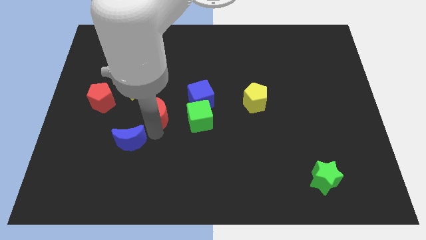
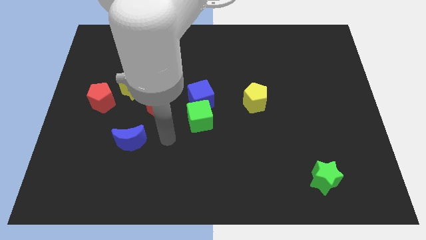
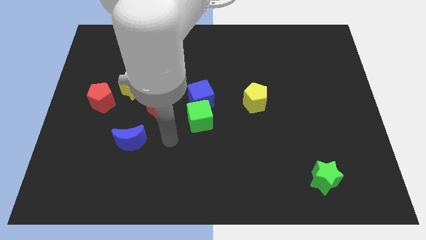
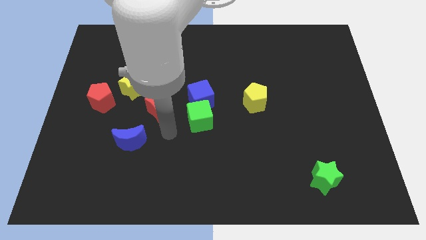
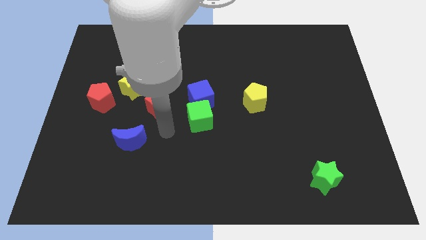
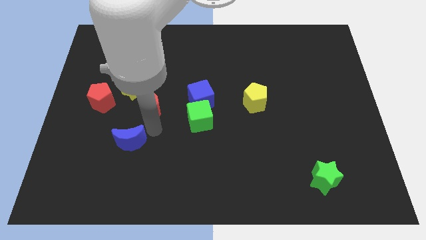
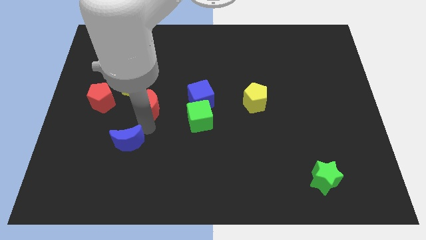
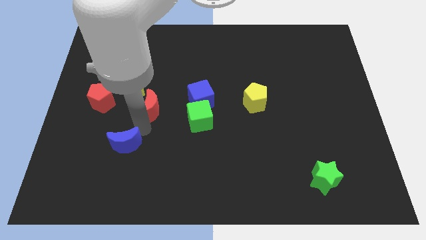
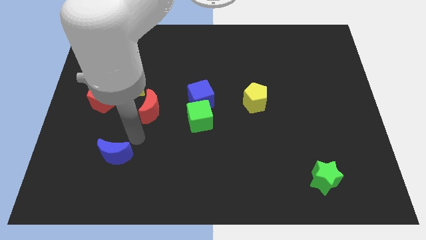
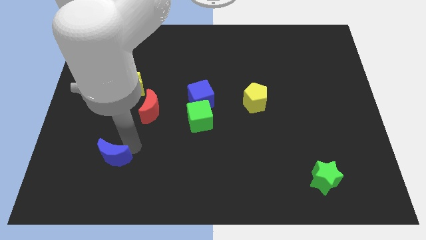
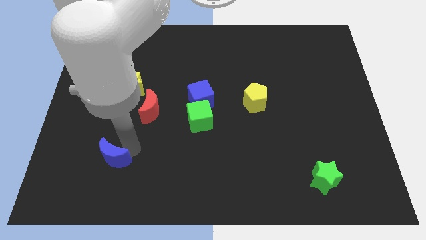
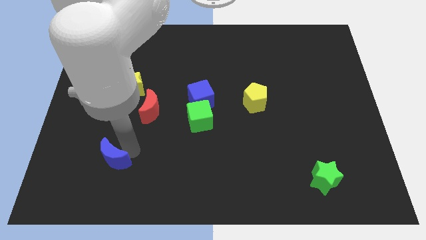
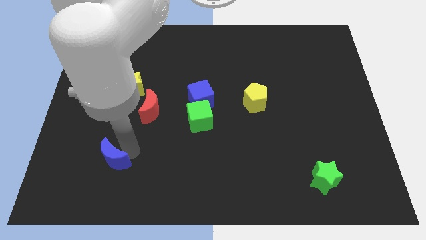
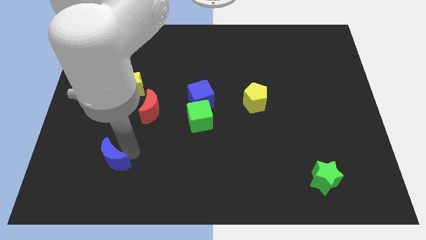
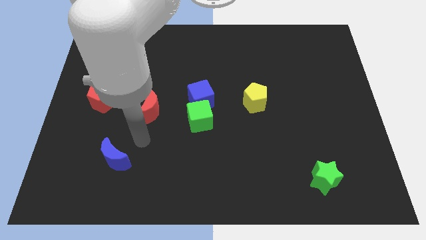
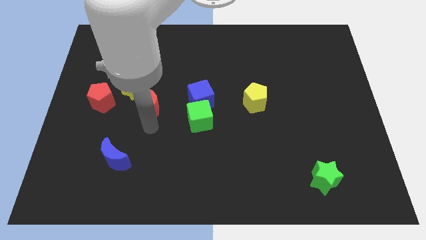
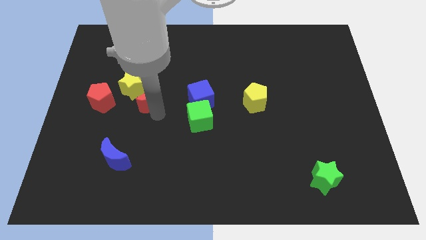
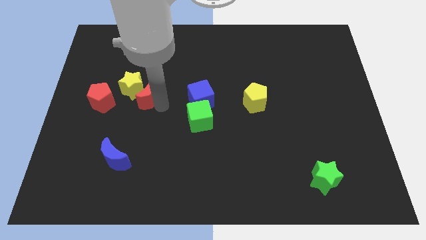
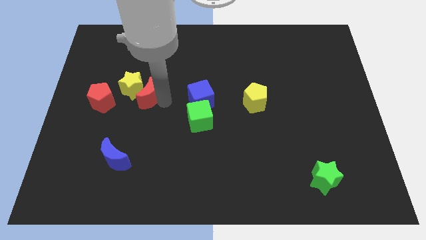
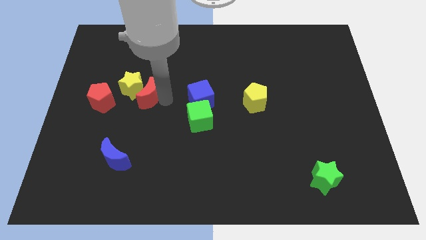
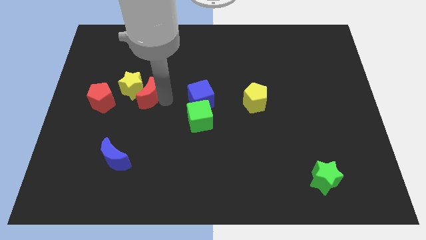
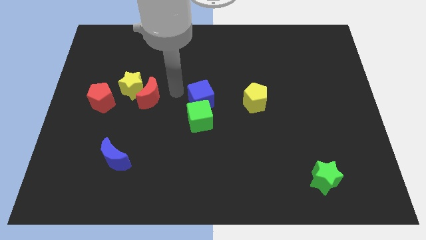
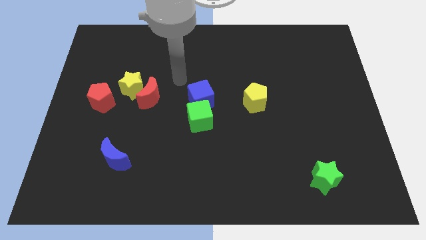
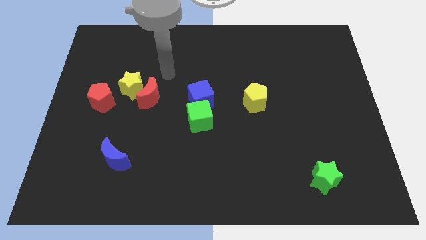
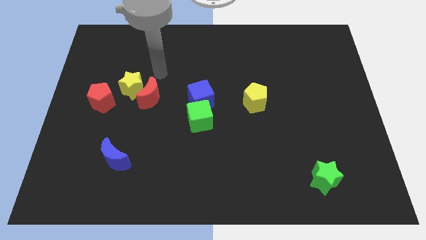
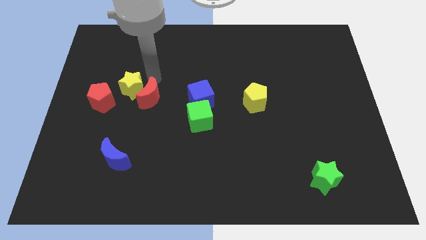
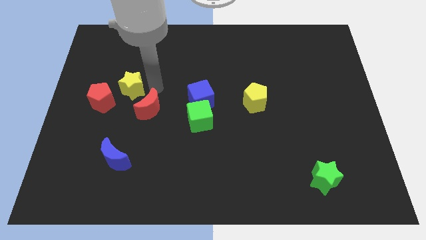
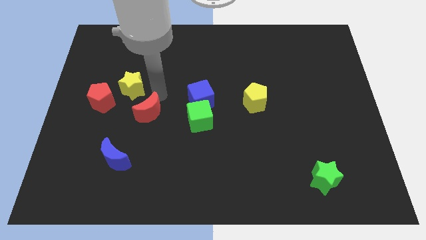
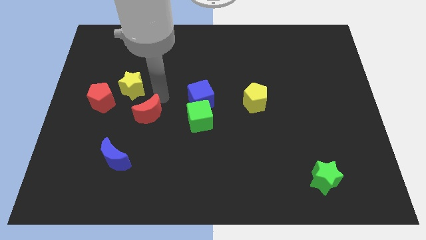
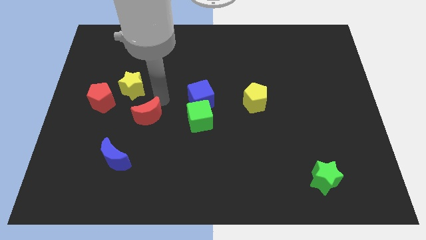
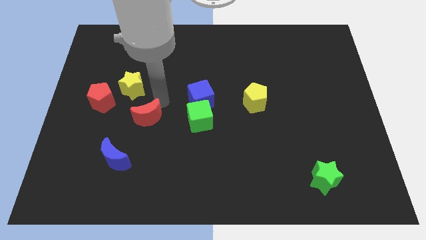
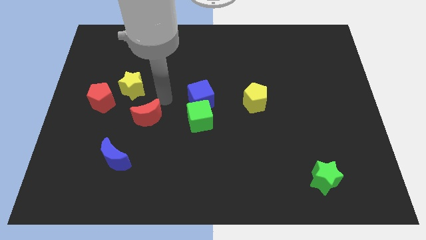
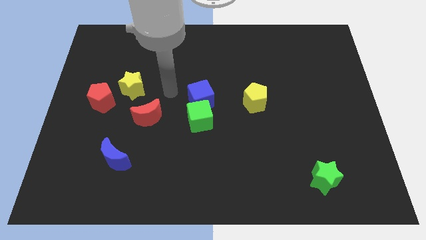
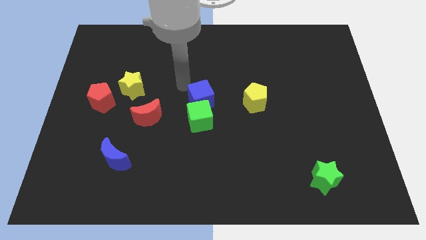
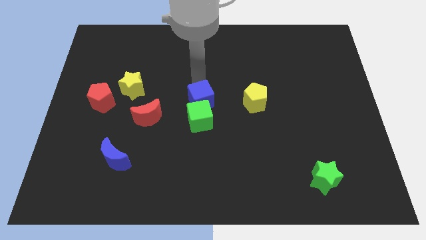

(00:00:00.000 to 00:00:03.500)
move red moon slightly down

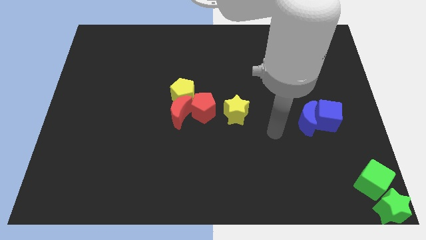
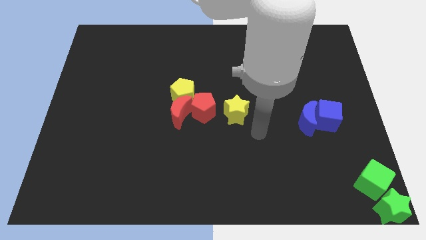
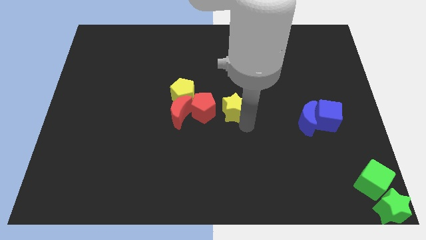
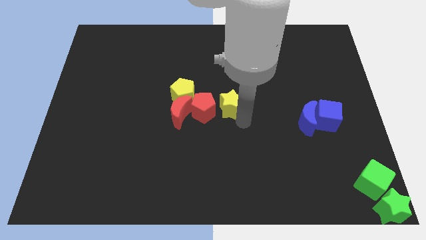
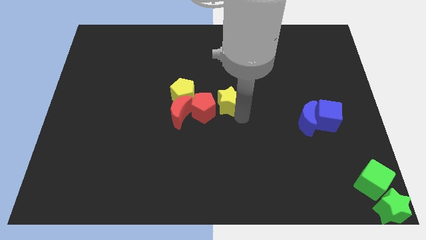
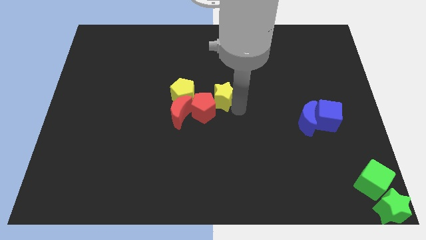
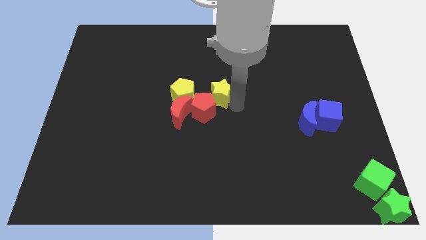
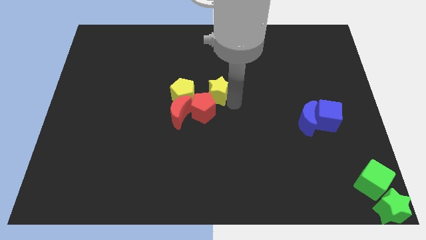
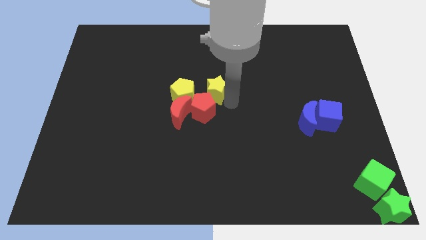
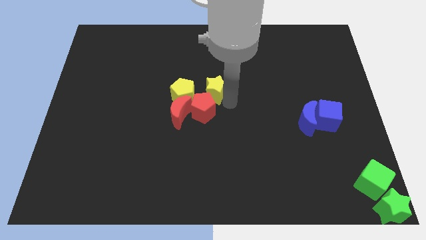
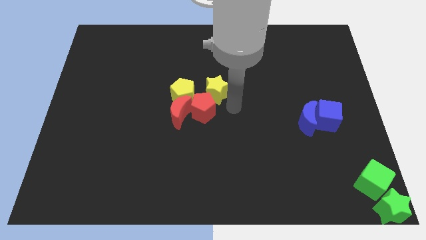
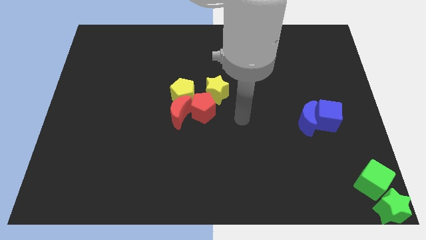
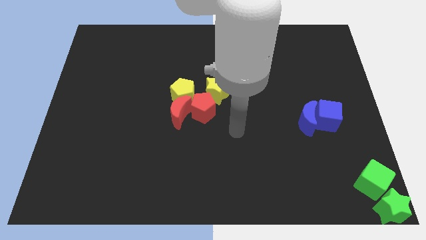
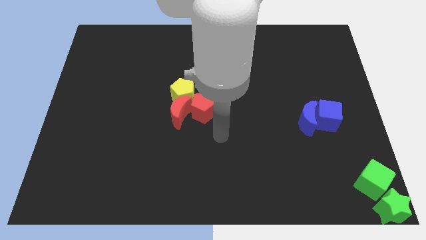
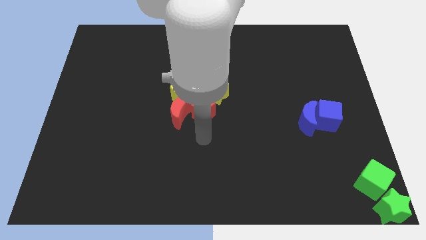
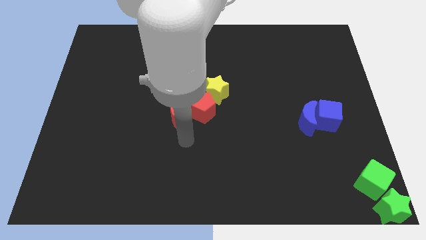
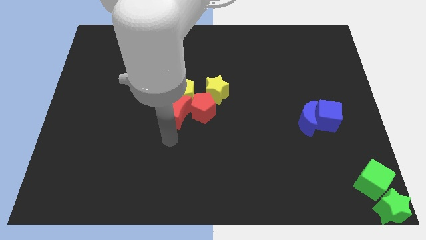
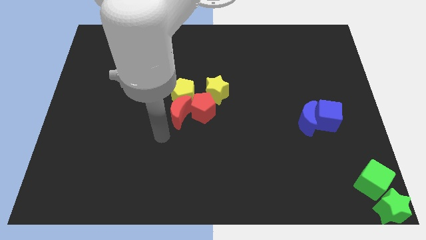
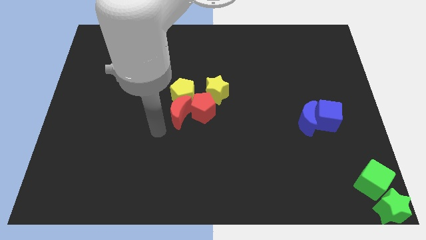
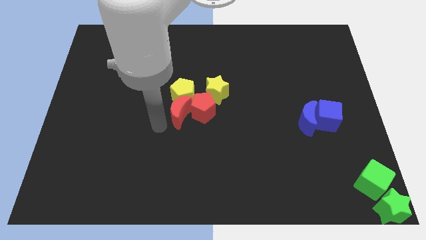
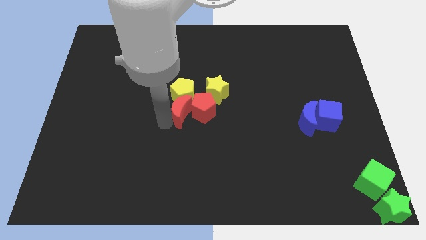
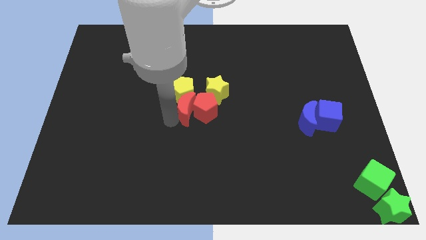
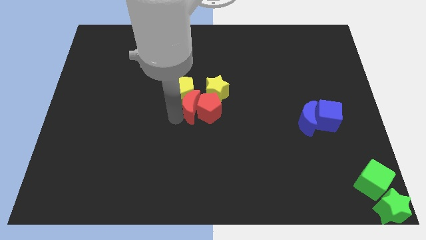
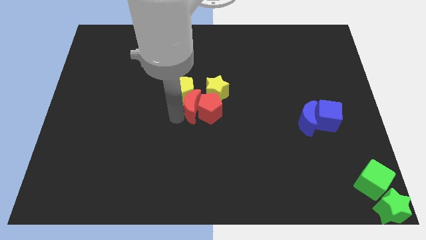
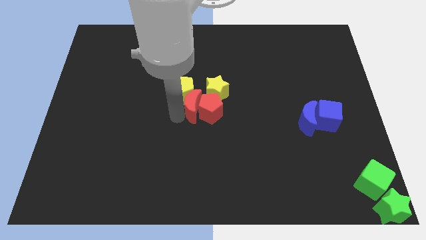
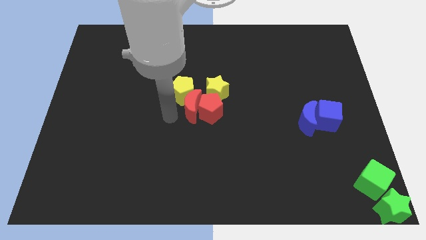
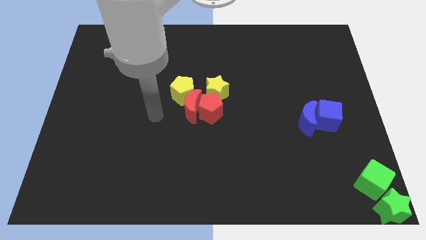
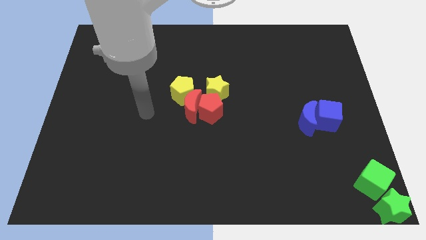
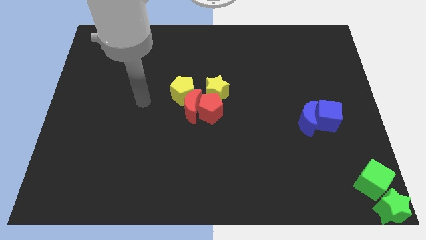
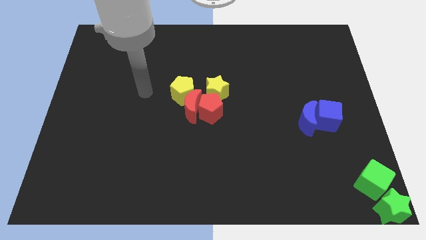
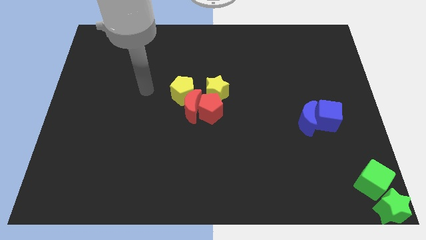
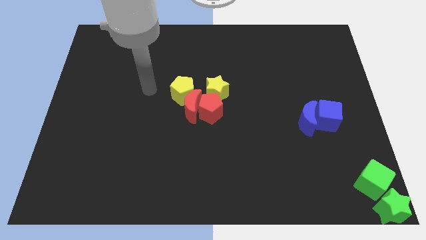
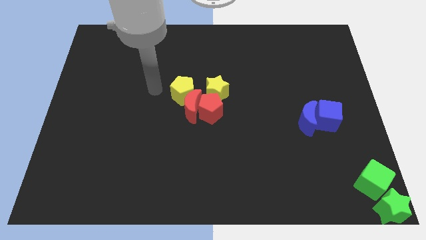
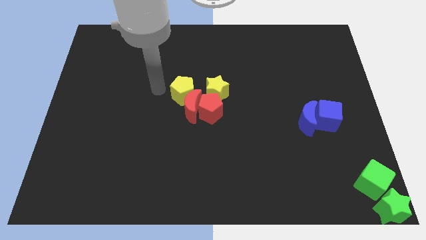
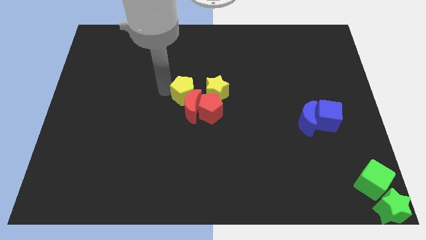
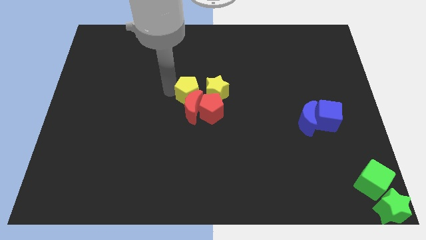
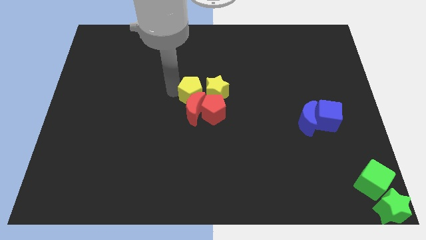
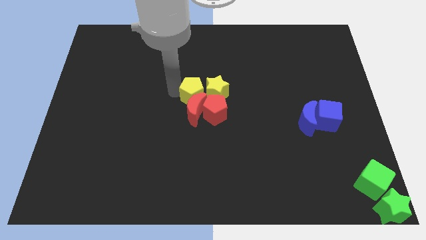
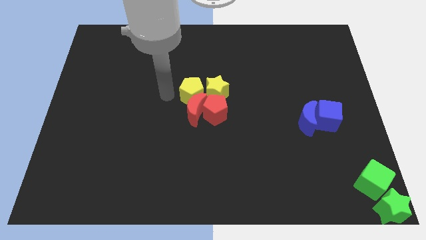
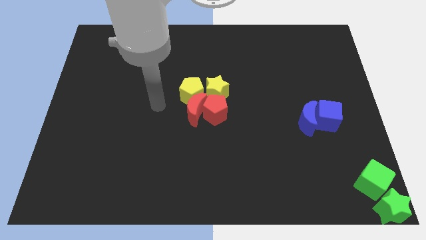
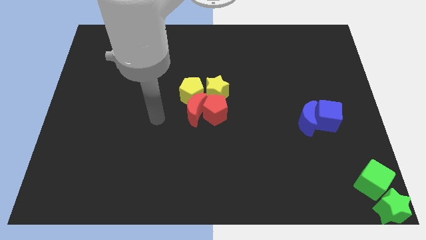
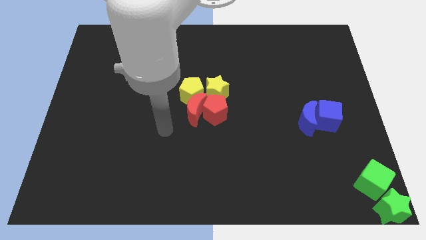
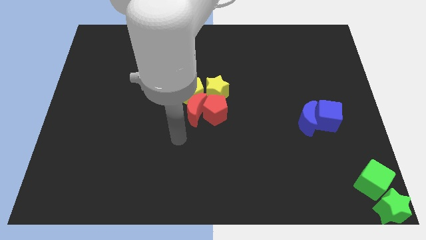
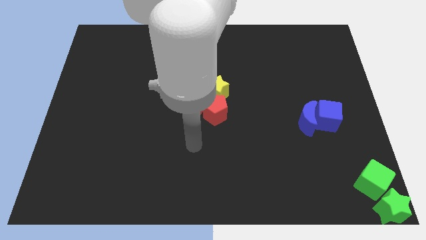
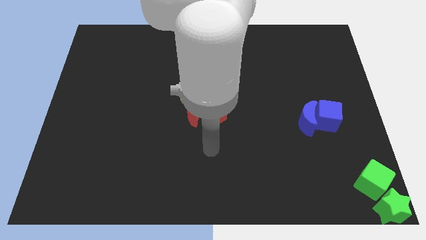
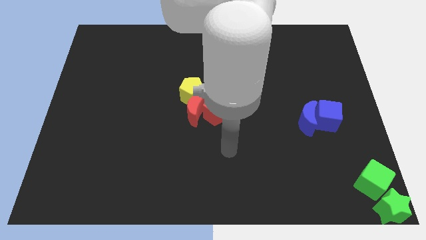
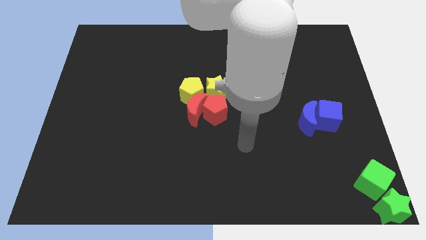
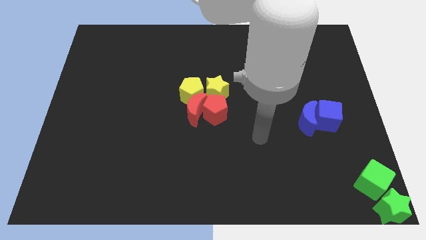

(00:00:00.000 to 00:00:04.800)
adjust the yellow and blue block in the center

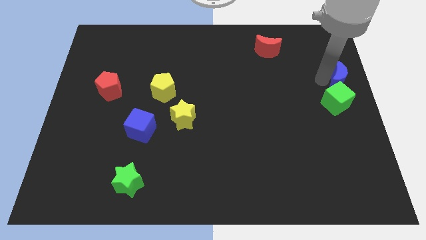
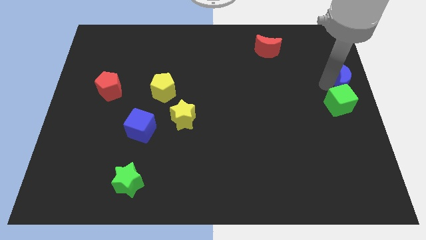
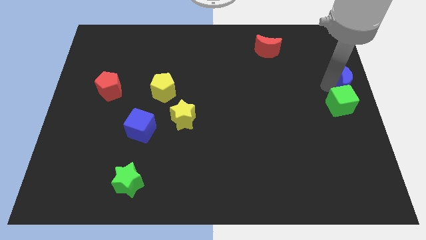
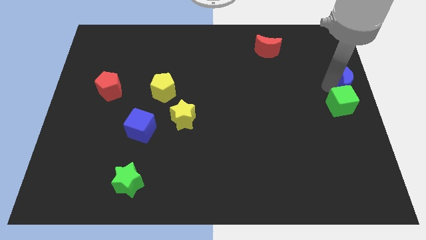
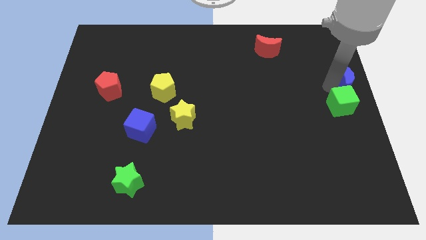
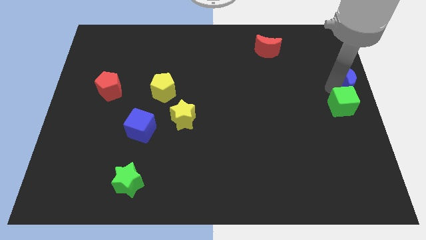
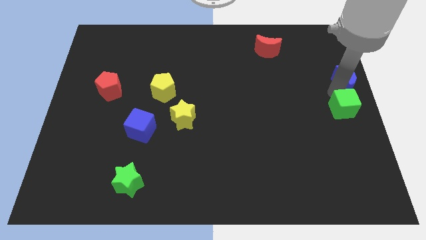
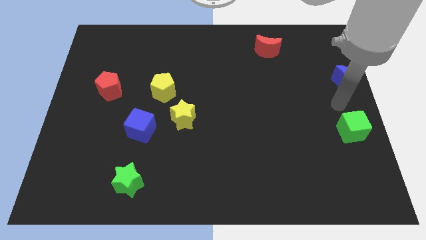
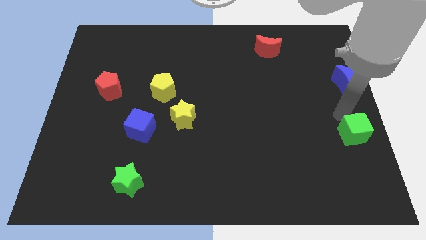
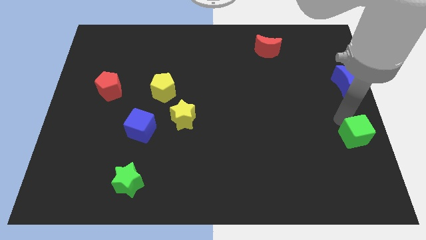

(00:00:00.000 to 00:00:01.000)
separate green cube from blue moon
